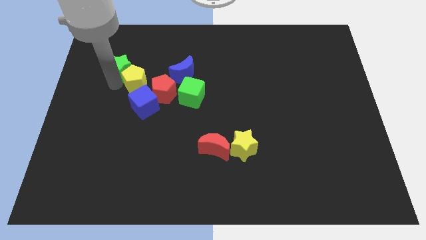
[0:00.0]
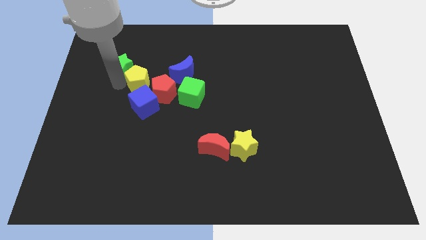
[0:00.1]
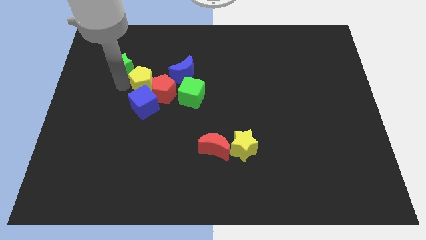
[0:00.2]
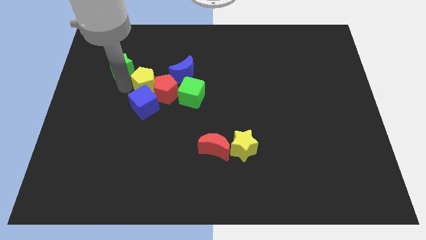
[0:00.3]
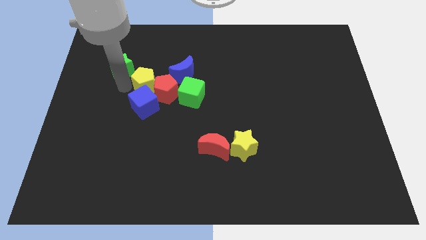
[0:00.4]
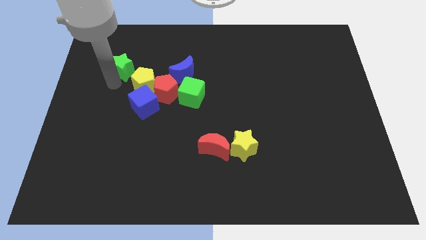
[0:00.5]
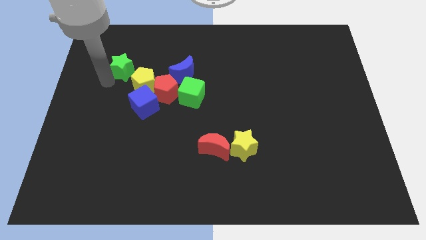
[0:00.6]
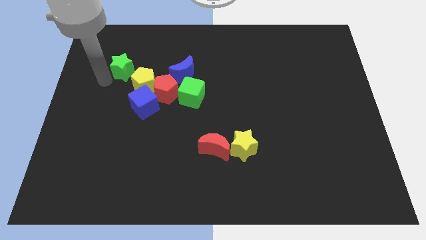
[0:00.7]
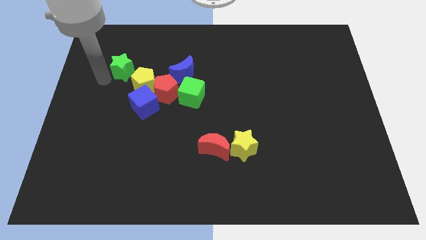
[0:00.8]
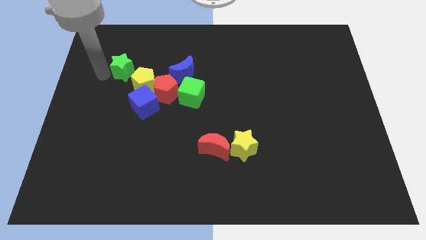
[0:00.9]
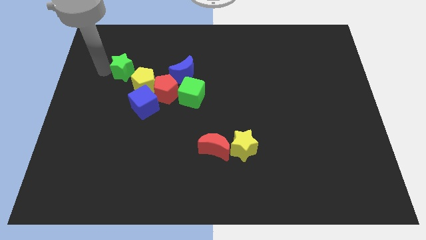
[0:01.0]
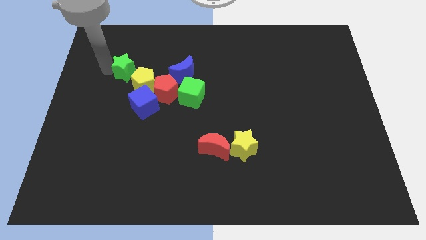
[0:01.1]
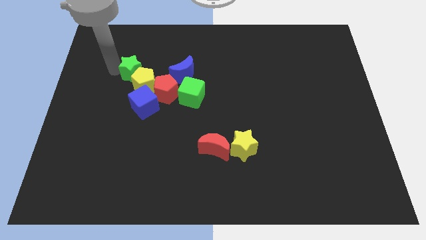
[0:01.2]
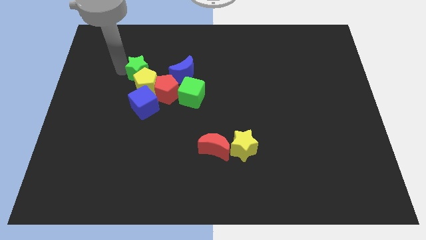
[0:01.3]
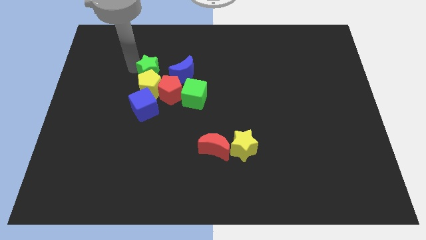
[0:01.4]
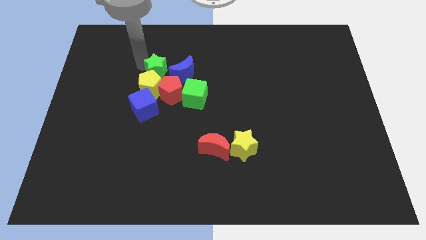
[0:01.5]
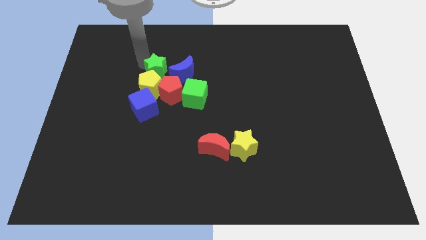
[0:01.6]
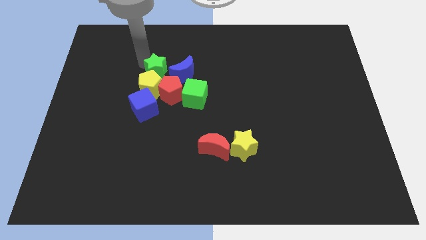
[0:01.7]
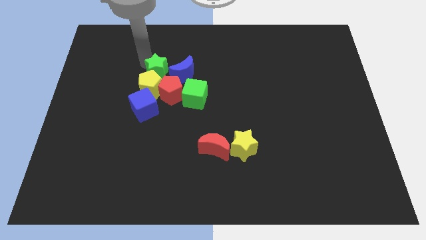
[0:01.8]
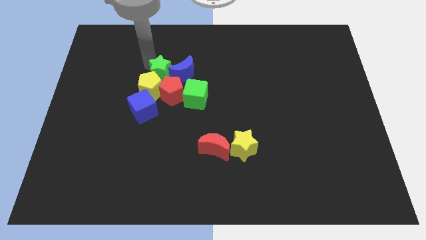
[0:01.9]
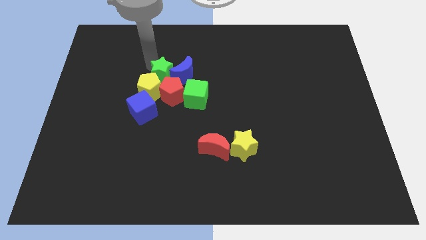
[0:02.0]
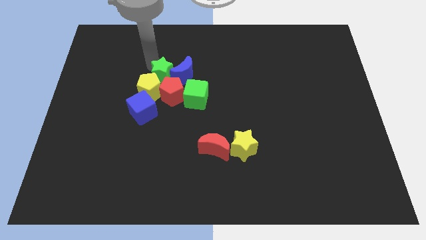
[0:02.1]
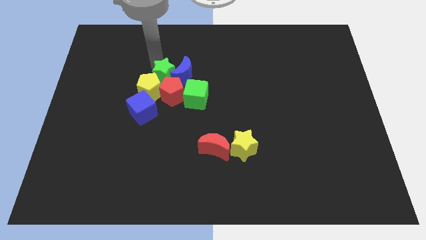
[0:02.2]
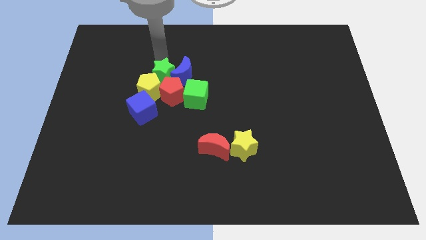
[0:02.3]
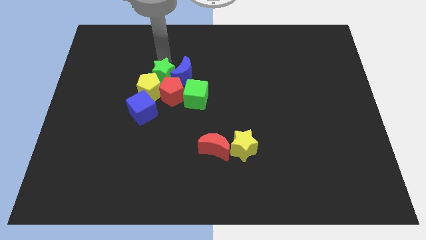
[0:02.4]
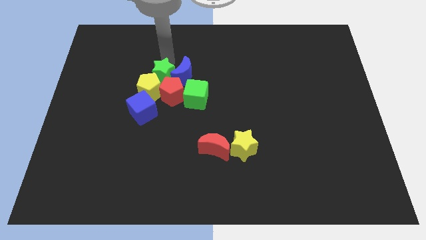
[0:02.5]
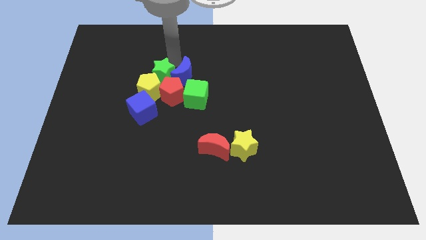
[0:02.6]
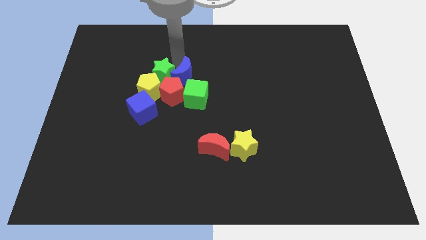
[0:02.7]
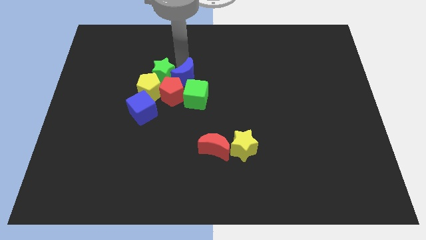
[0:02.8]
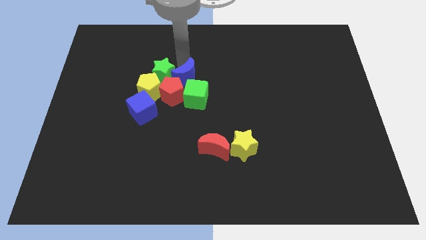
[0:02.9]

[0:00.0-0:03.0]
move the green star left to the blue crescent

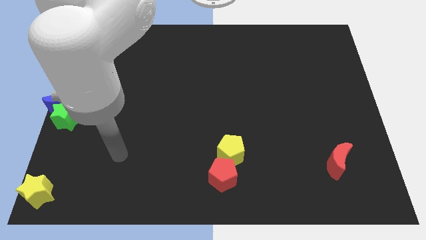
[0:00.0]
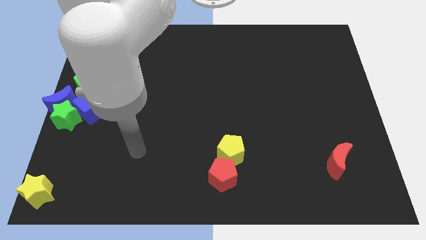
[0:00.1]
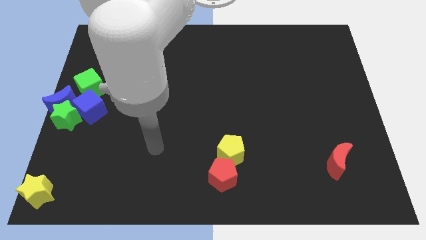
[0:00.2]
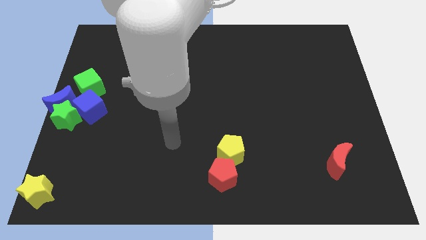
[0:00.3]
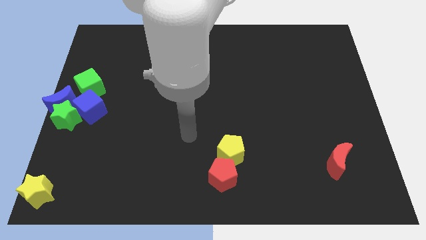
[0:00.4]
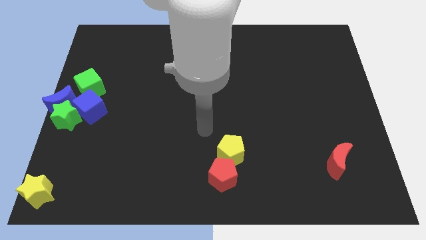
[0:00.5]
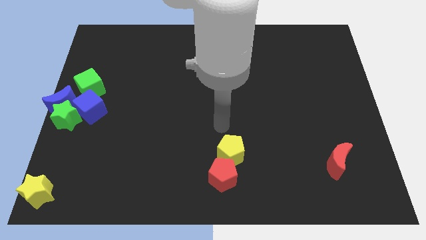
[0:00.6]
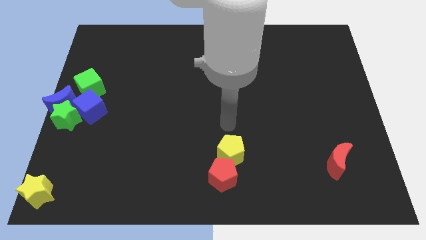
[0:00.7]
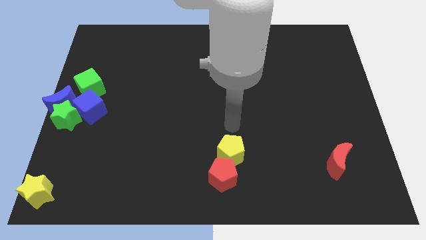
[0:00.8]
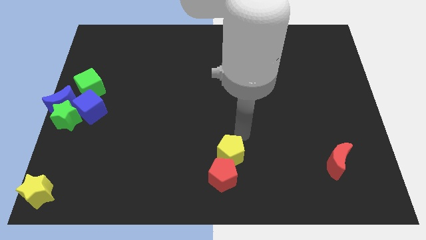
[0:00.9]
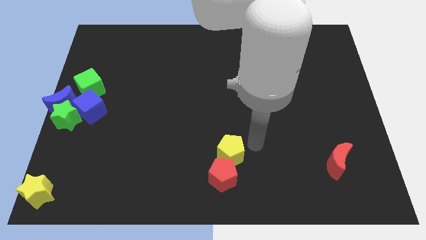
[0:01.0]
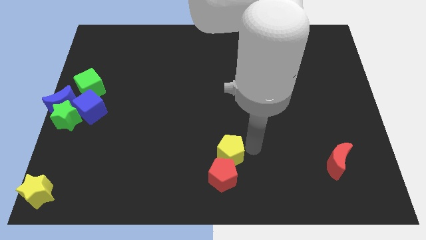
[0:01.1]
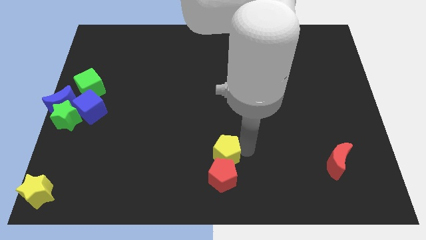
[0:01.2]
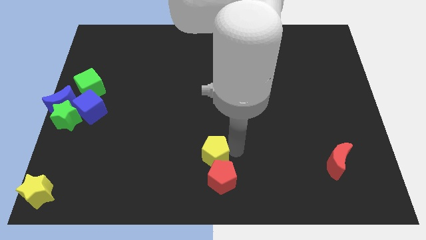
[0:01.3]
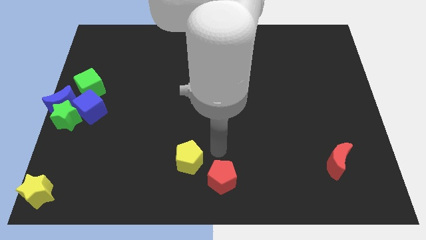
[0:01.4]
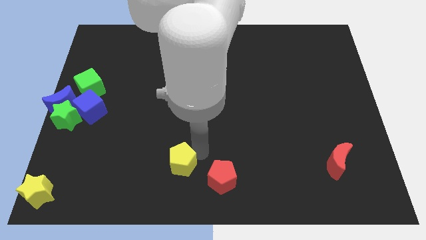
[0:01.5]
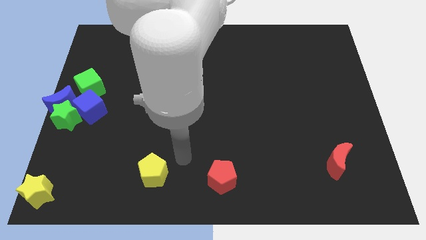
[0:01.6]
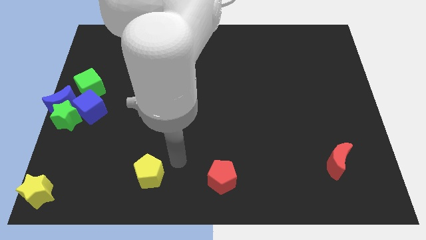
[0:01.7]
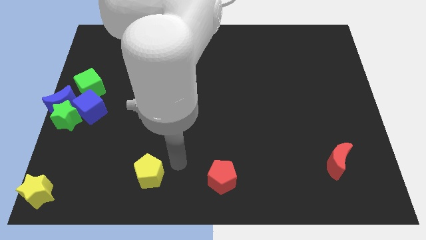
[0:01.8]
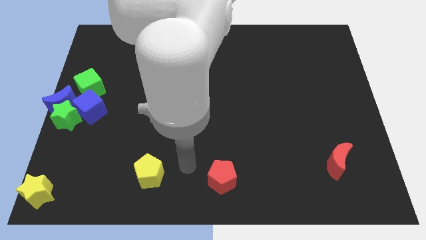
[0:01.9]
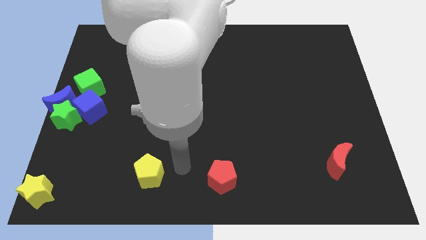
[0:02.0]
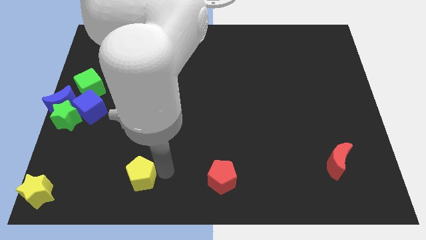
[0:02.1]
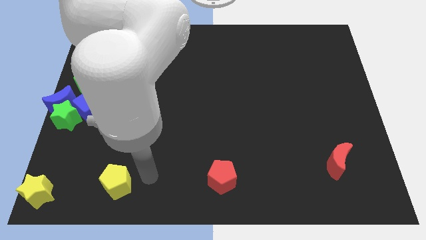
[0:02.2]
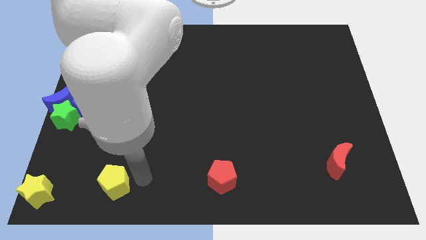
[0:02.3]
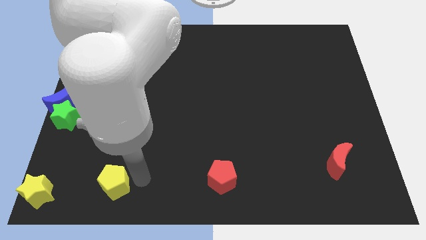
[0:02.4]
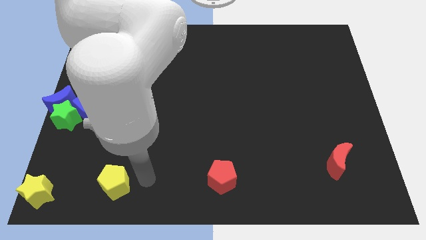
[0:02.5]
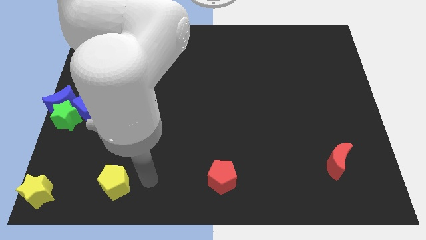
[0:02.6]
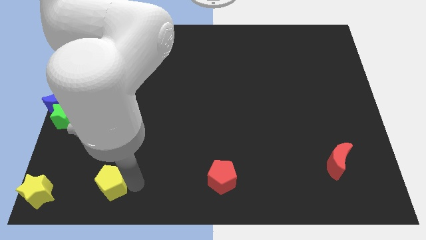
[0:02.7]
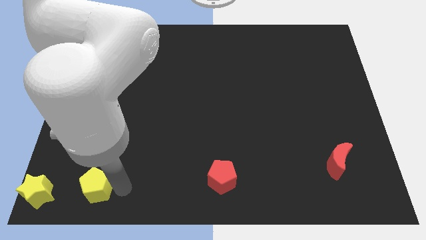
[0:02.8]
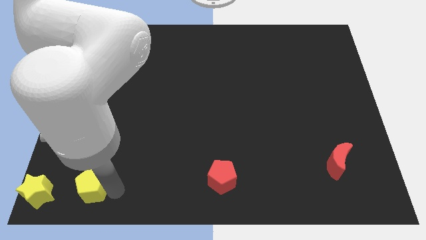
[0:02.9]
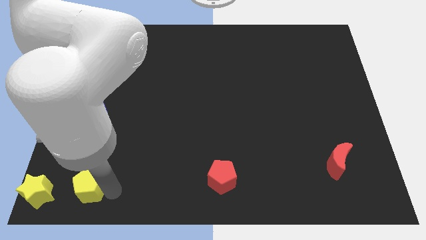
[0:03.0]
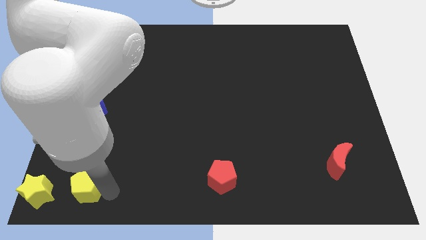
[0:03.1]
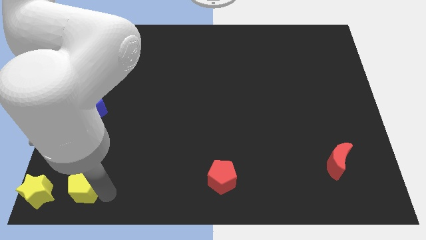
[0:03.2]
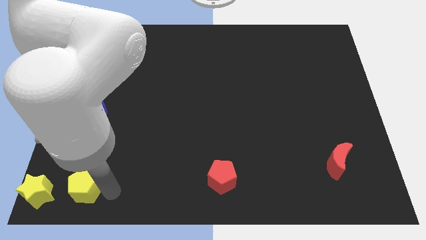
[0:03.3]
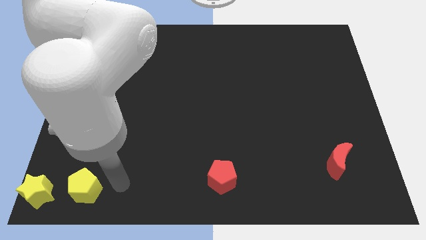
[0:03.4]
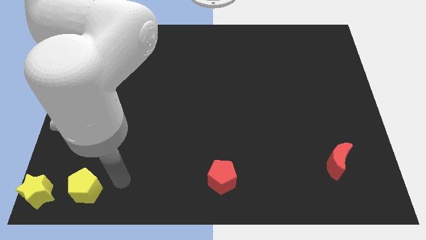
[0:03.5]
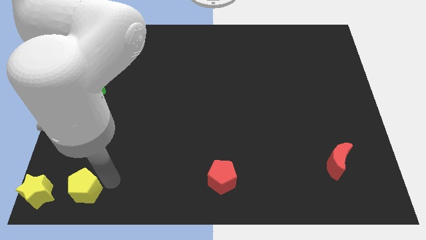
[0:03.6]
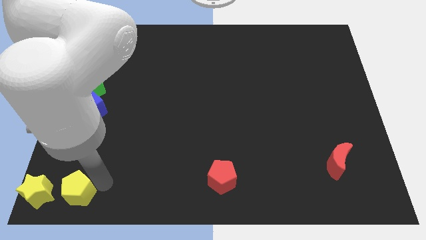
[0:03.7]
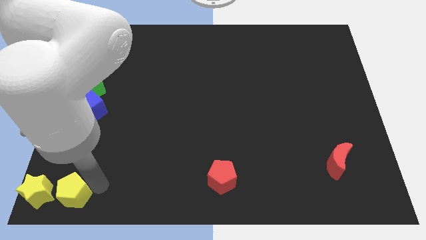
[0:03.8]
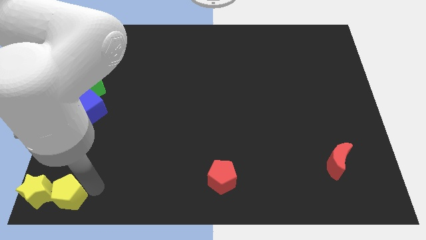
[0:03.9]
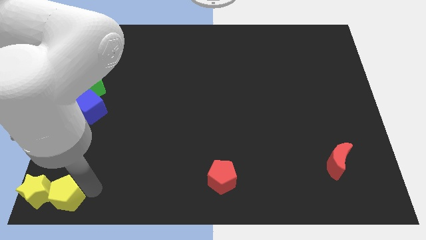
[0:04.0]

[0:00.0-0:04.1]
move the yellow pentagon to the right side of the yellow star

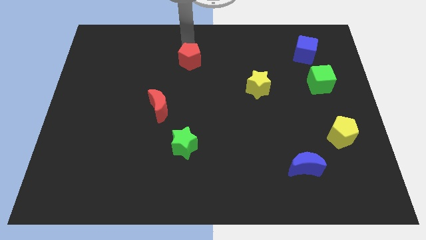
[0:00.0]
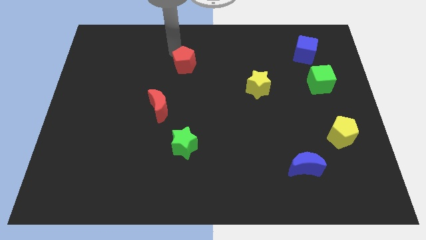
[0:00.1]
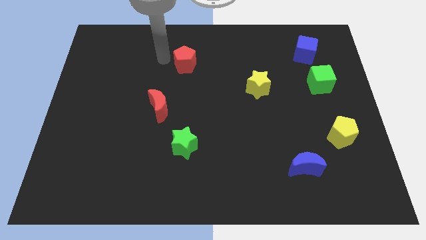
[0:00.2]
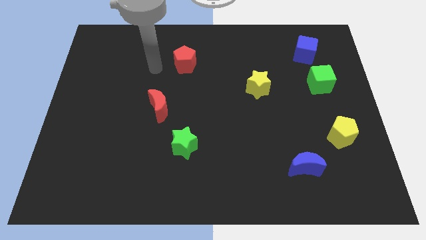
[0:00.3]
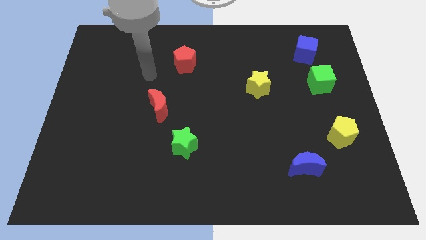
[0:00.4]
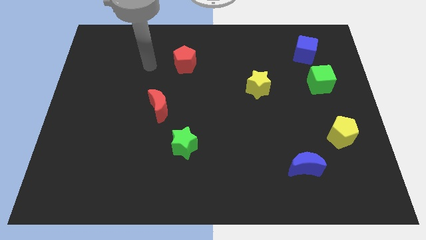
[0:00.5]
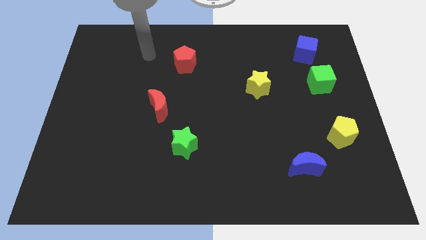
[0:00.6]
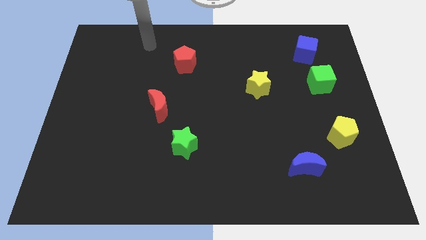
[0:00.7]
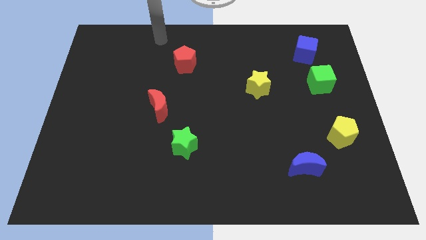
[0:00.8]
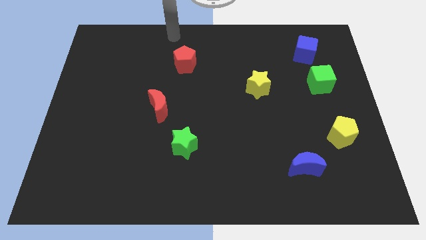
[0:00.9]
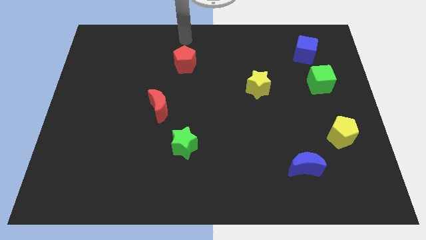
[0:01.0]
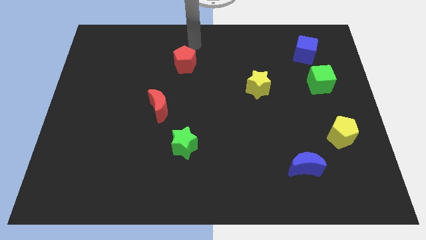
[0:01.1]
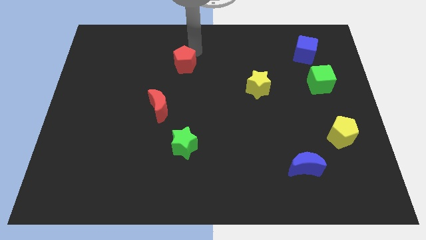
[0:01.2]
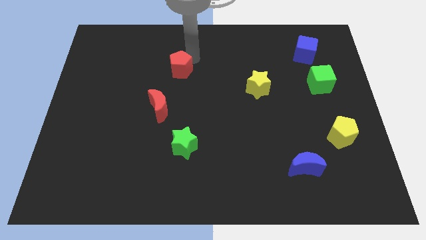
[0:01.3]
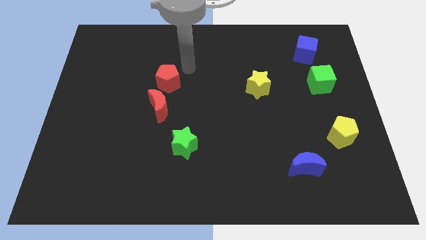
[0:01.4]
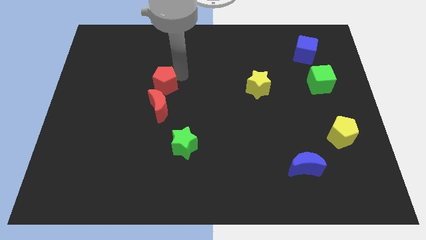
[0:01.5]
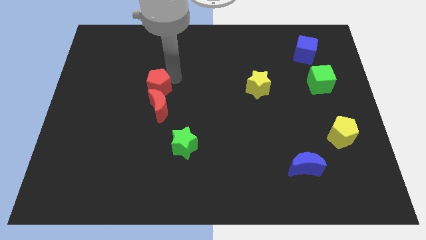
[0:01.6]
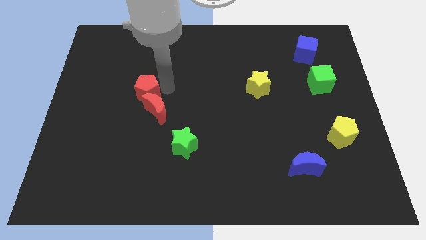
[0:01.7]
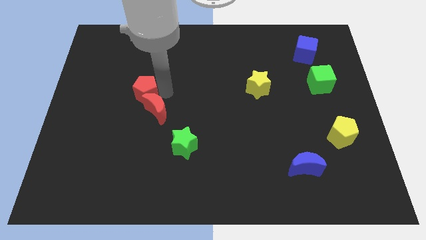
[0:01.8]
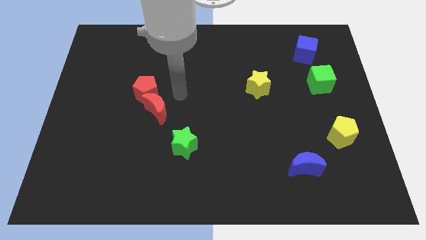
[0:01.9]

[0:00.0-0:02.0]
move the red pentagon into the red moon
